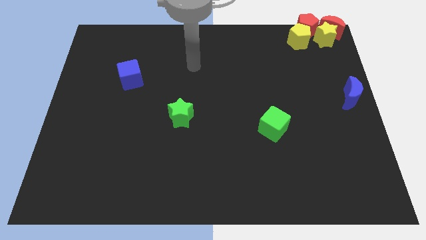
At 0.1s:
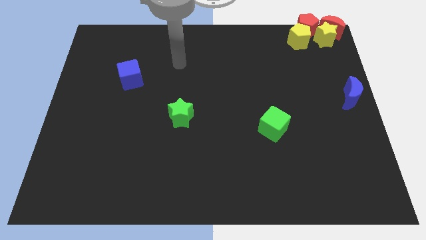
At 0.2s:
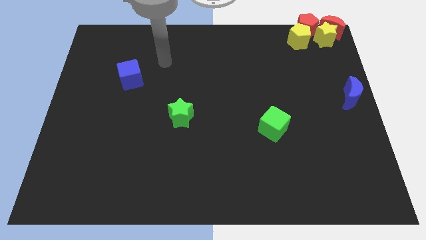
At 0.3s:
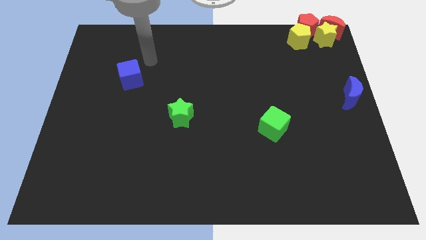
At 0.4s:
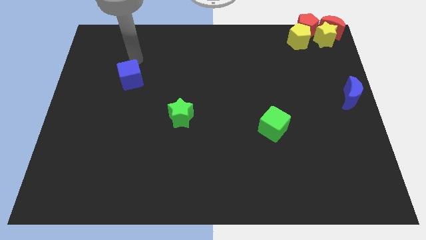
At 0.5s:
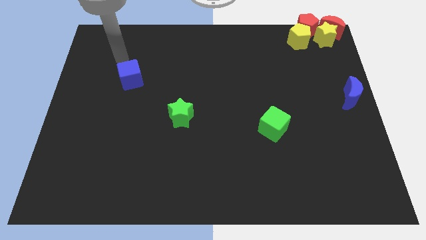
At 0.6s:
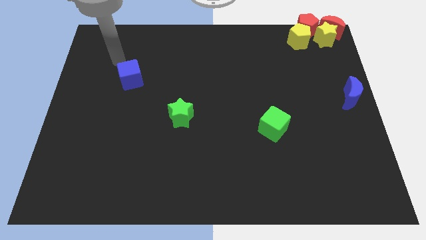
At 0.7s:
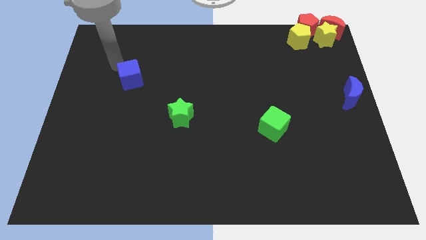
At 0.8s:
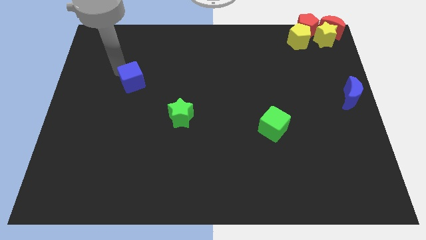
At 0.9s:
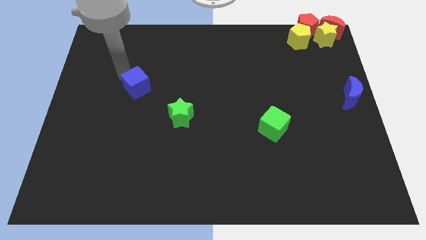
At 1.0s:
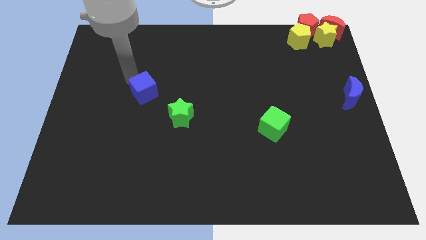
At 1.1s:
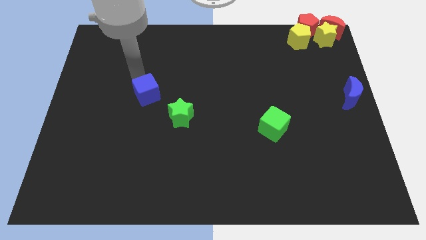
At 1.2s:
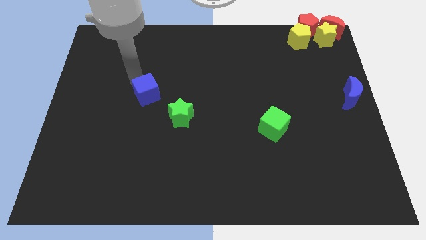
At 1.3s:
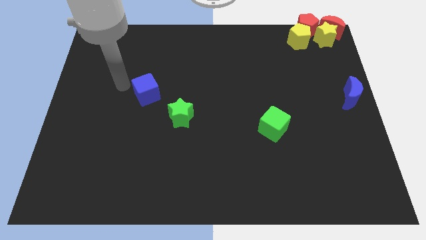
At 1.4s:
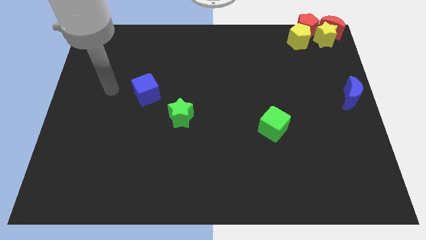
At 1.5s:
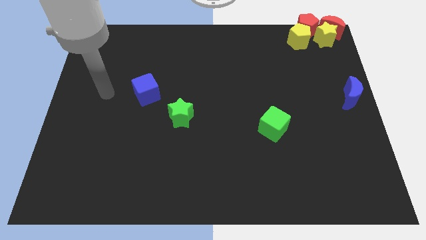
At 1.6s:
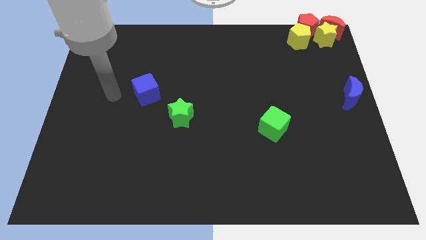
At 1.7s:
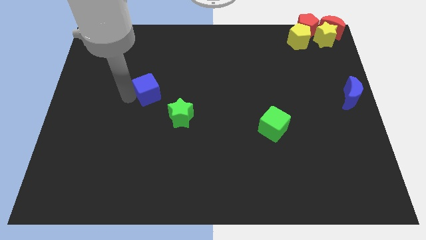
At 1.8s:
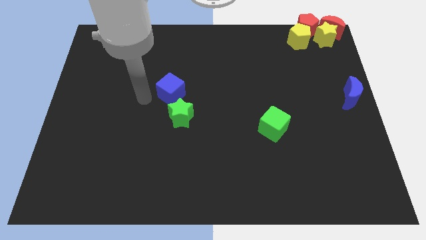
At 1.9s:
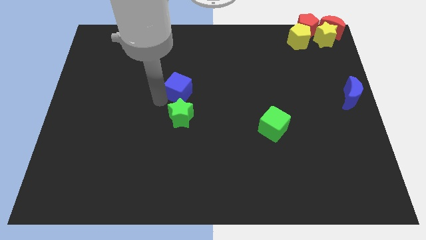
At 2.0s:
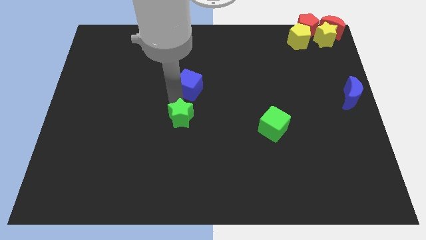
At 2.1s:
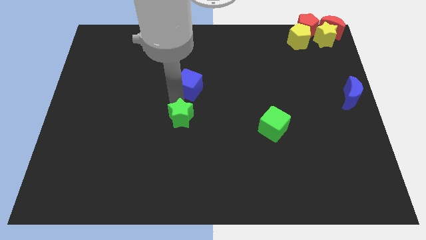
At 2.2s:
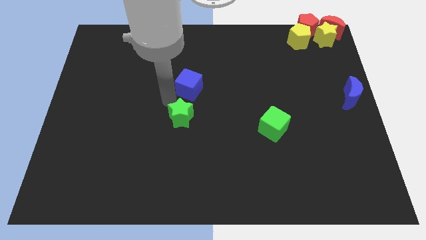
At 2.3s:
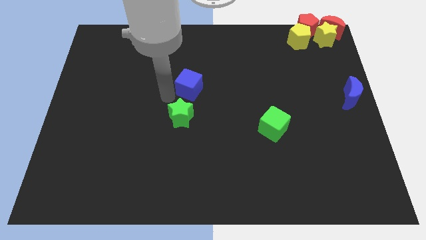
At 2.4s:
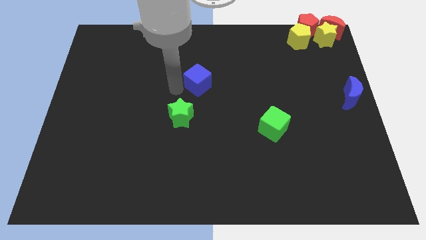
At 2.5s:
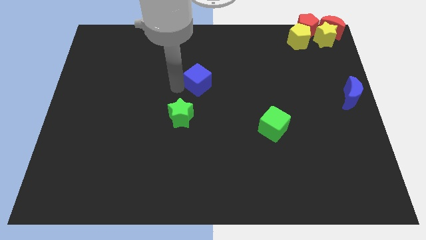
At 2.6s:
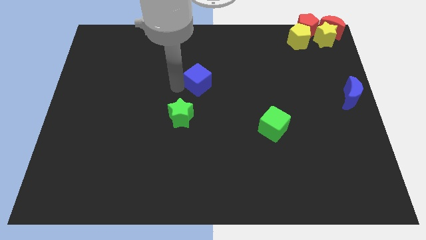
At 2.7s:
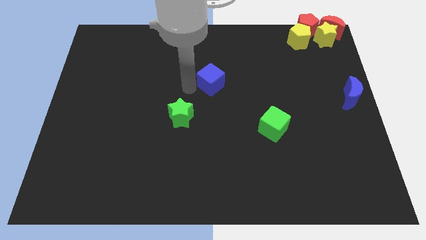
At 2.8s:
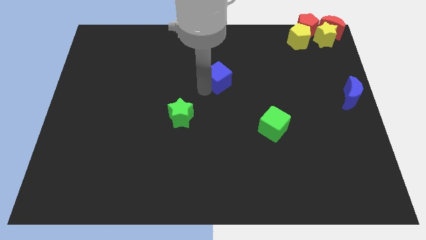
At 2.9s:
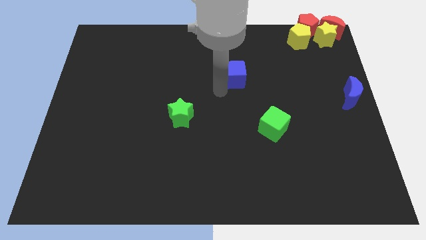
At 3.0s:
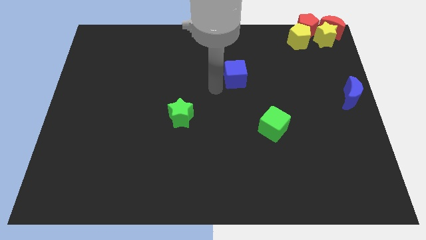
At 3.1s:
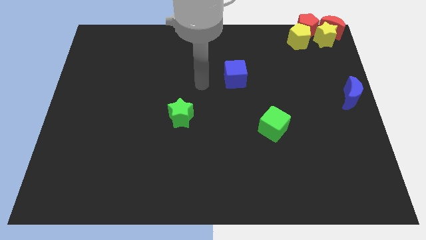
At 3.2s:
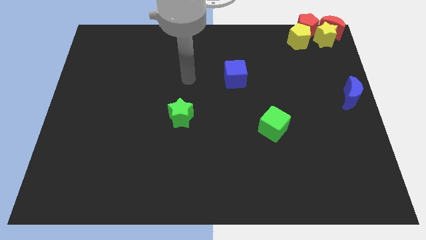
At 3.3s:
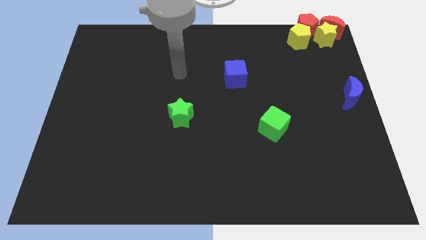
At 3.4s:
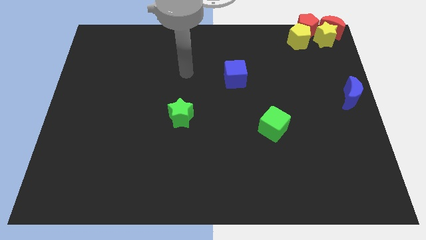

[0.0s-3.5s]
make an atriangle by placing blue cube

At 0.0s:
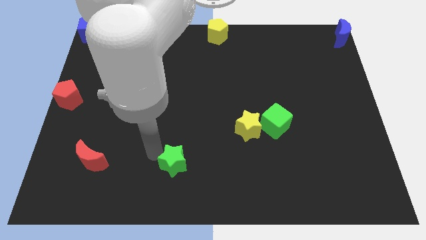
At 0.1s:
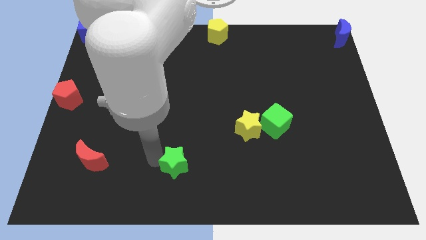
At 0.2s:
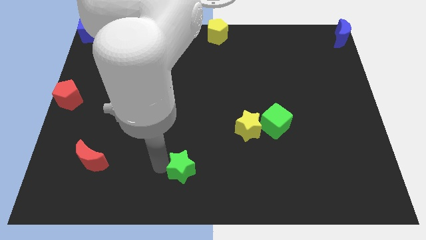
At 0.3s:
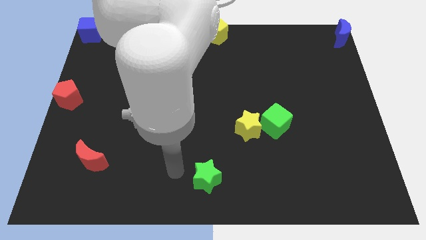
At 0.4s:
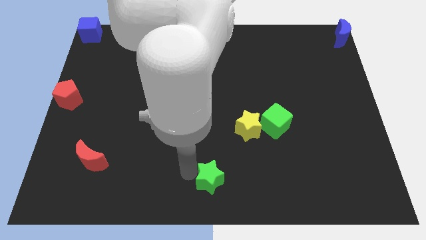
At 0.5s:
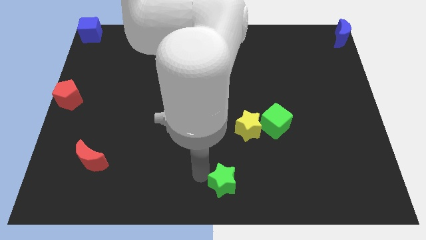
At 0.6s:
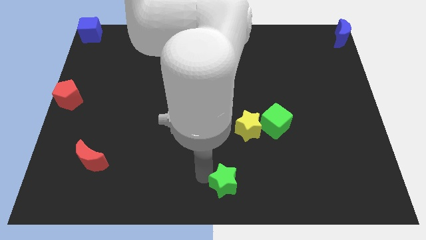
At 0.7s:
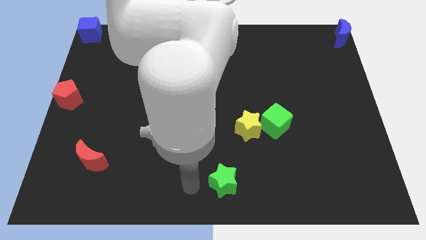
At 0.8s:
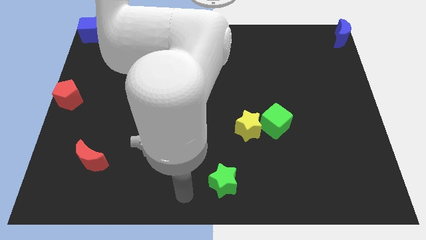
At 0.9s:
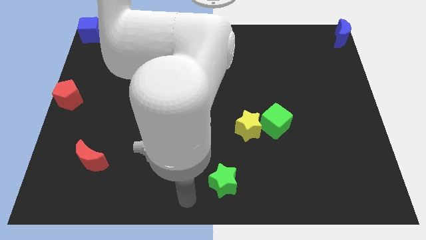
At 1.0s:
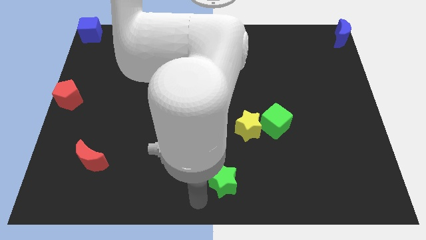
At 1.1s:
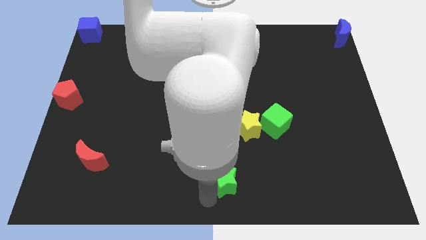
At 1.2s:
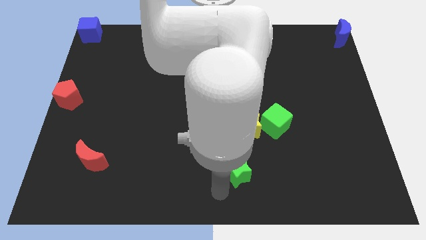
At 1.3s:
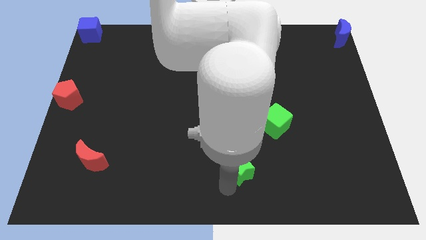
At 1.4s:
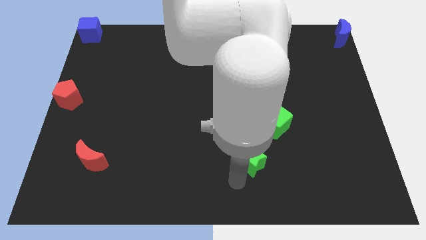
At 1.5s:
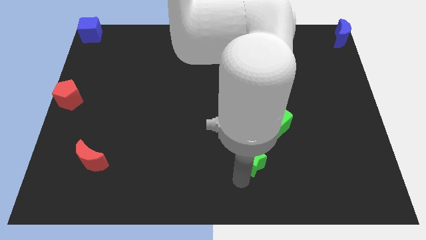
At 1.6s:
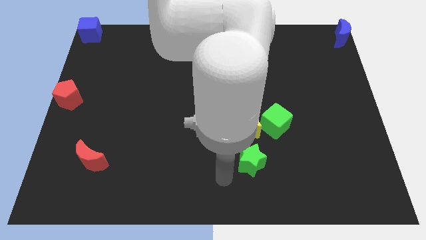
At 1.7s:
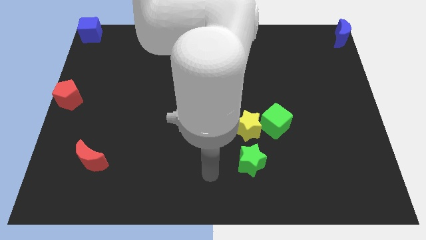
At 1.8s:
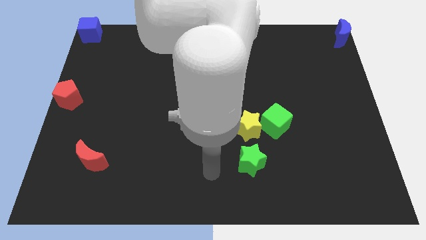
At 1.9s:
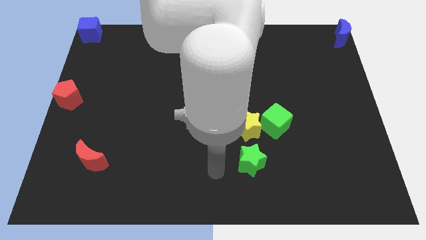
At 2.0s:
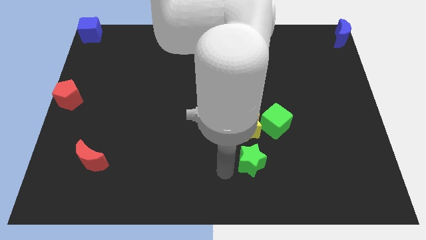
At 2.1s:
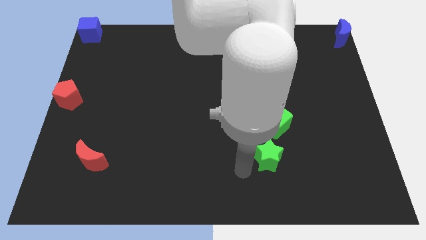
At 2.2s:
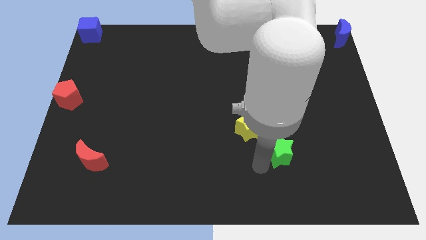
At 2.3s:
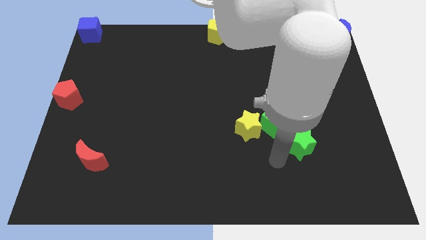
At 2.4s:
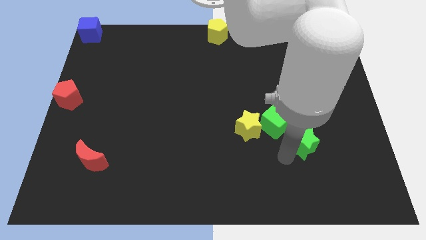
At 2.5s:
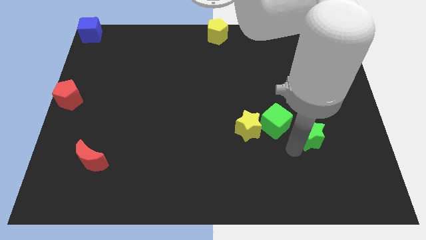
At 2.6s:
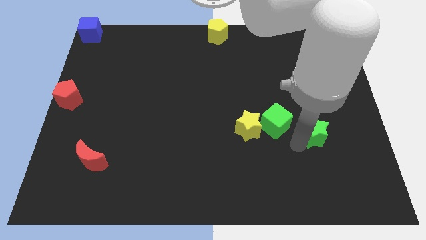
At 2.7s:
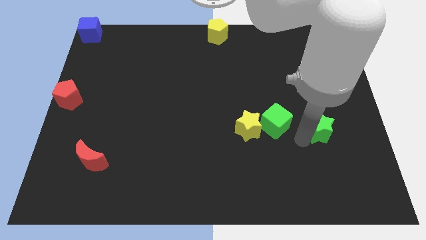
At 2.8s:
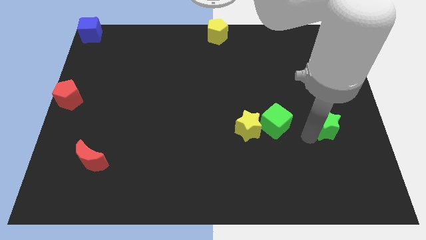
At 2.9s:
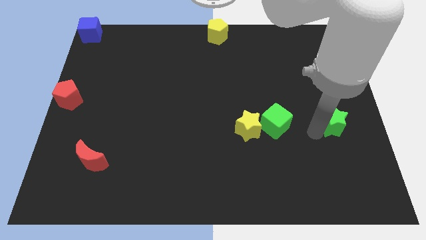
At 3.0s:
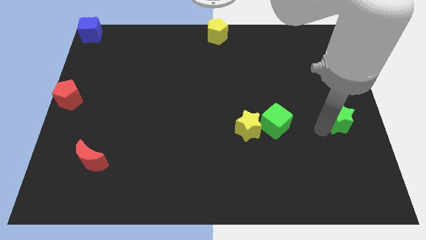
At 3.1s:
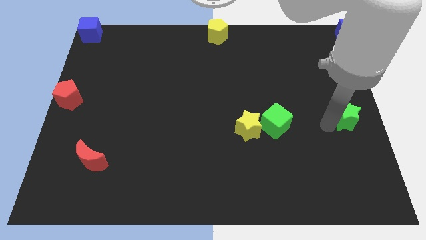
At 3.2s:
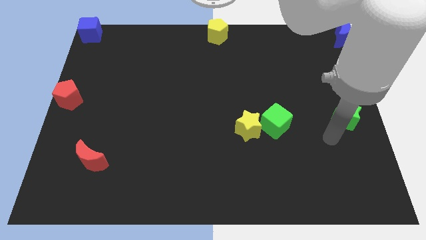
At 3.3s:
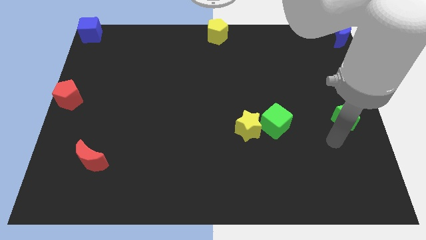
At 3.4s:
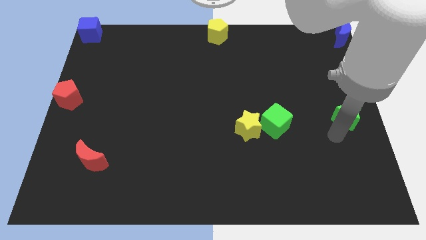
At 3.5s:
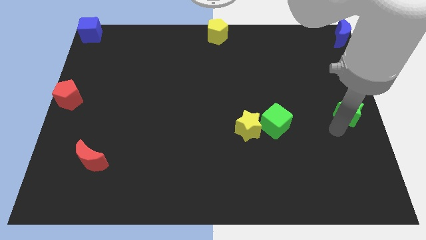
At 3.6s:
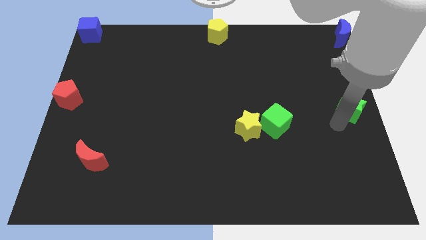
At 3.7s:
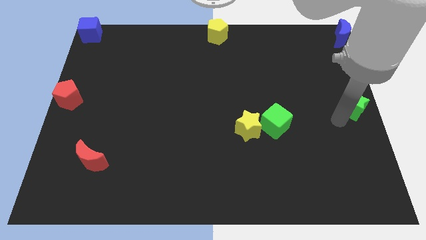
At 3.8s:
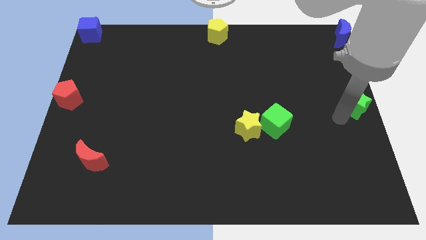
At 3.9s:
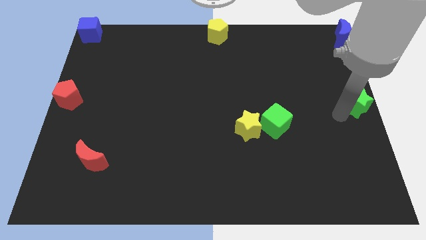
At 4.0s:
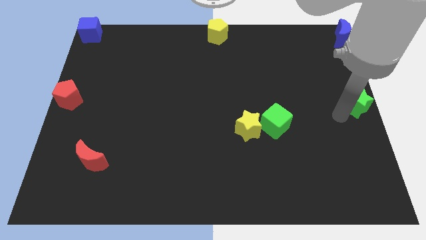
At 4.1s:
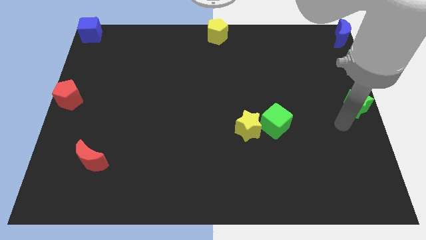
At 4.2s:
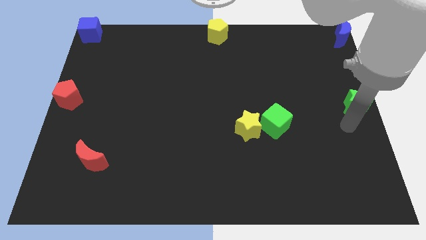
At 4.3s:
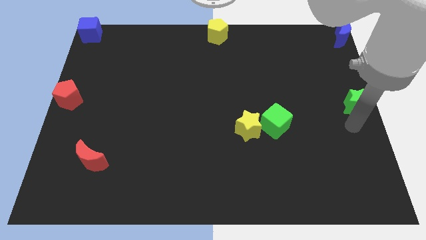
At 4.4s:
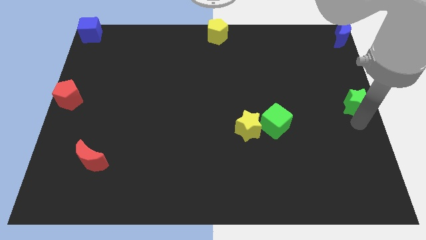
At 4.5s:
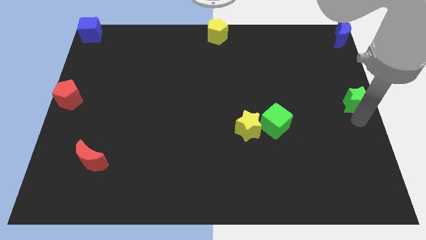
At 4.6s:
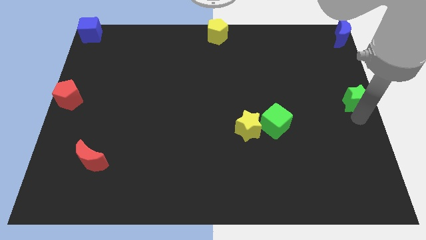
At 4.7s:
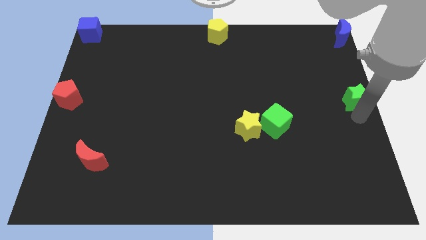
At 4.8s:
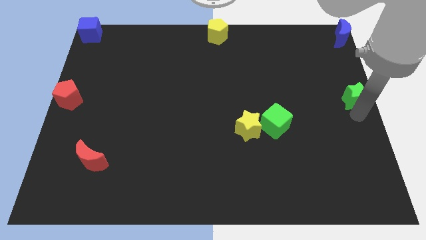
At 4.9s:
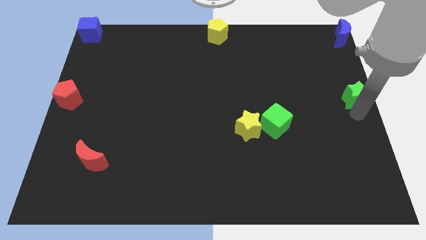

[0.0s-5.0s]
move the green star to the right center of the board

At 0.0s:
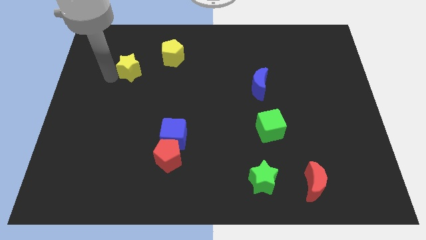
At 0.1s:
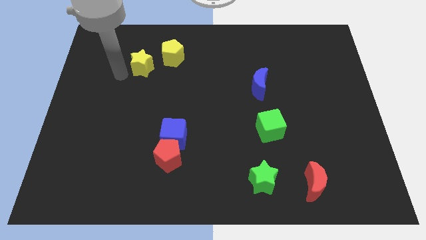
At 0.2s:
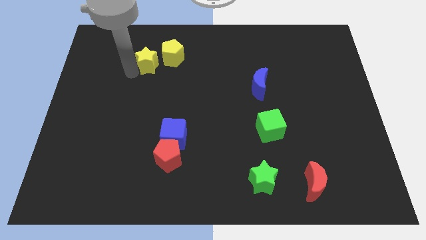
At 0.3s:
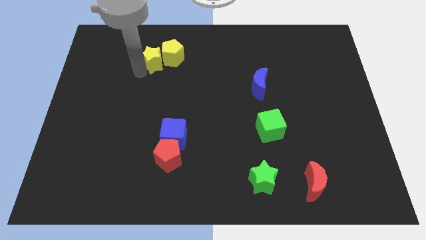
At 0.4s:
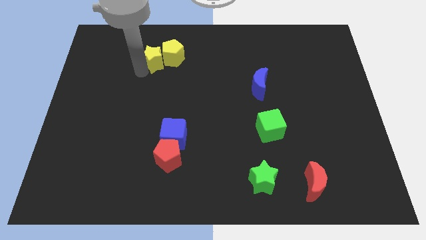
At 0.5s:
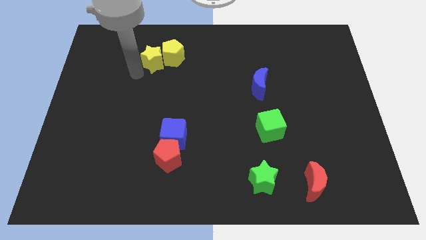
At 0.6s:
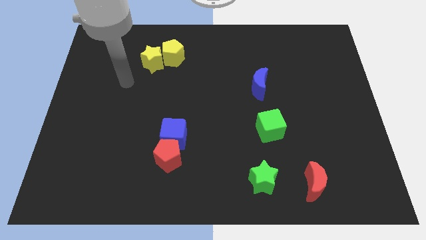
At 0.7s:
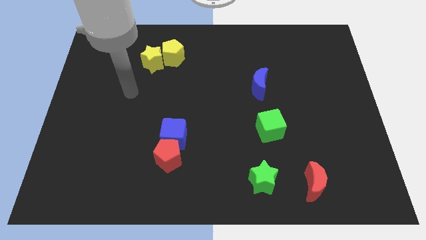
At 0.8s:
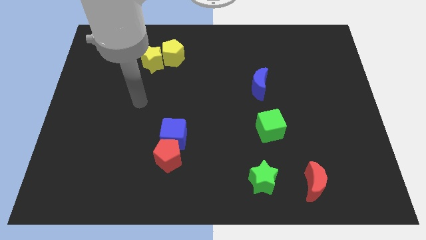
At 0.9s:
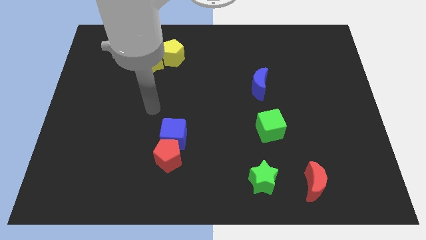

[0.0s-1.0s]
put the two yellow objects together
